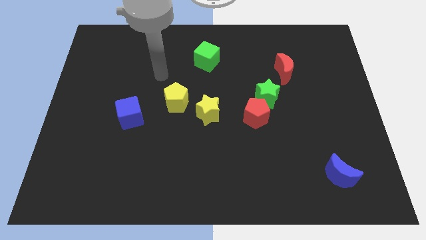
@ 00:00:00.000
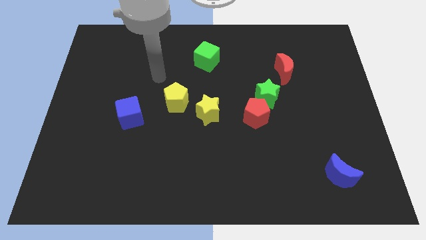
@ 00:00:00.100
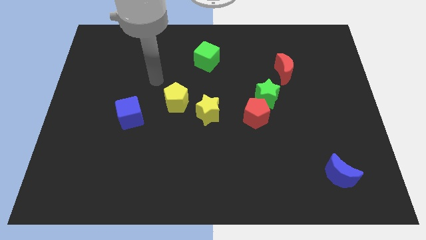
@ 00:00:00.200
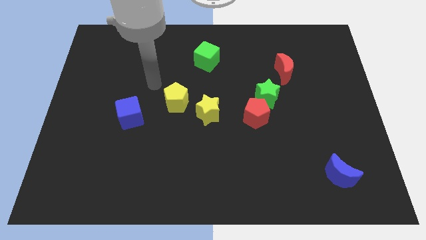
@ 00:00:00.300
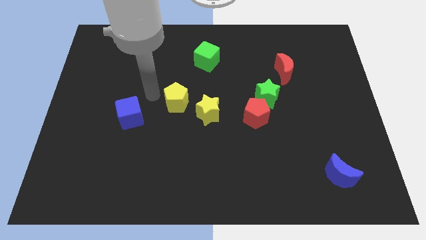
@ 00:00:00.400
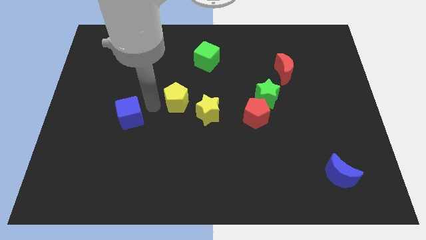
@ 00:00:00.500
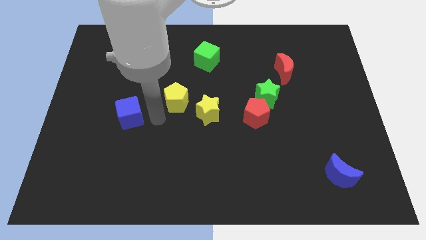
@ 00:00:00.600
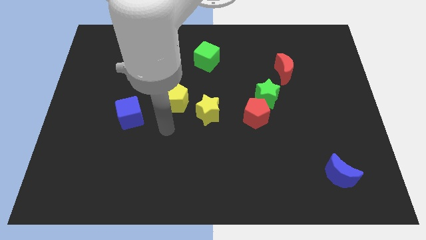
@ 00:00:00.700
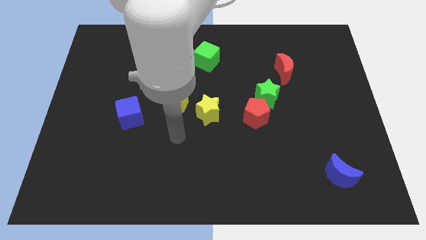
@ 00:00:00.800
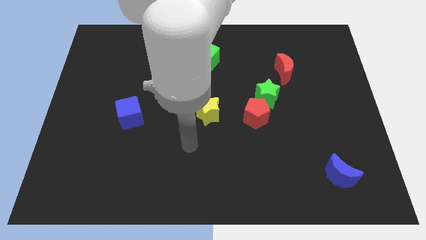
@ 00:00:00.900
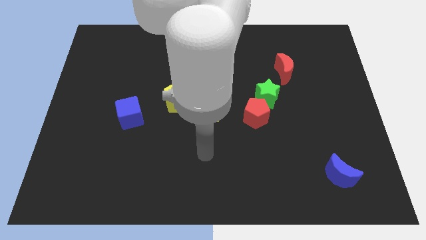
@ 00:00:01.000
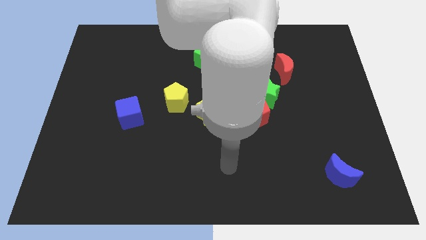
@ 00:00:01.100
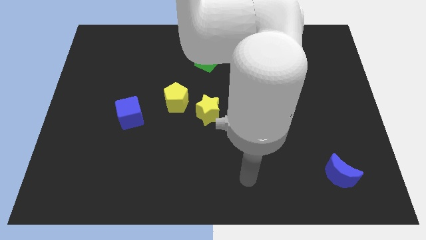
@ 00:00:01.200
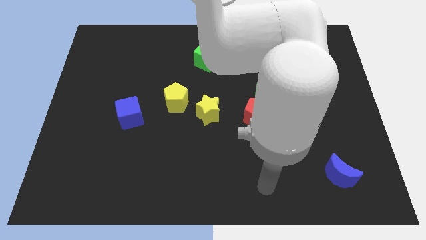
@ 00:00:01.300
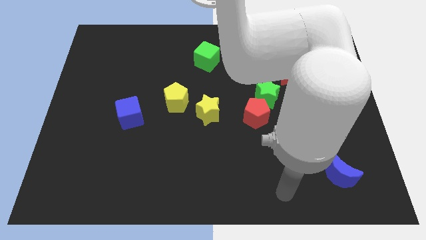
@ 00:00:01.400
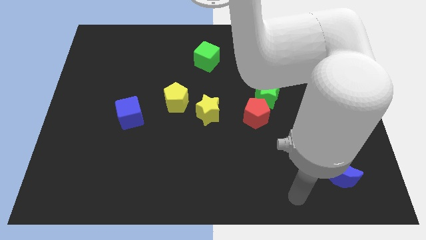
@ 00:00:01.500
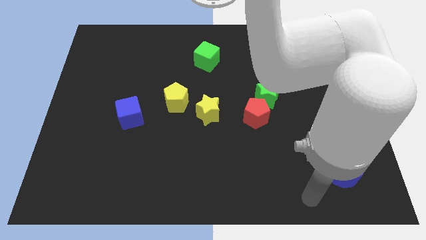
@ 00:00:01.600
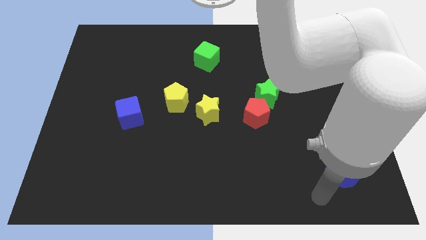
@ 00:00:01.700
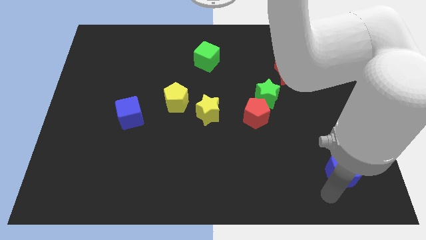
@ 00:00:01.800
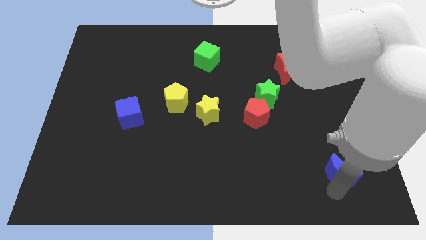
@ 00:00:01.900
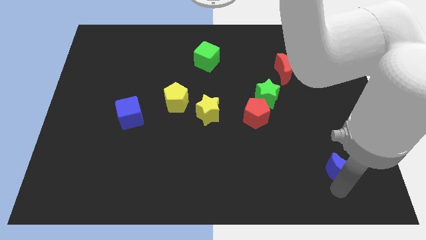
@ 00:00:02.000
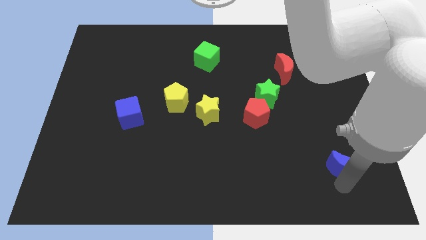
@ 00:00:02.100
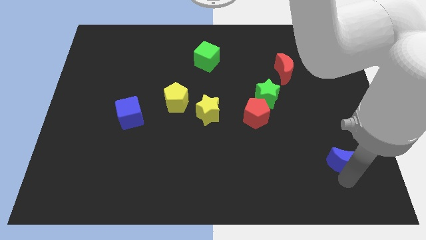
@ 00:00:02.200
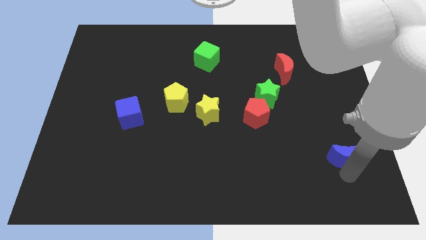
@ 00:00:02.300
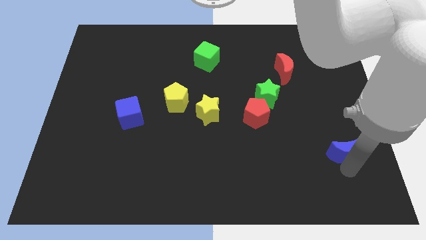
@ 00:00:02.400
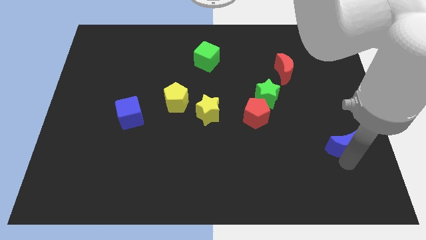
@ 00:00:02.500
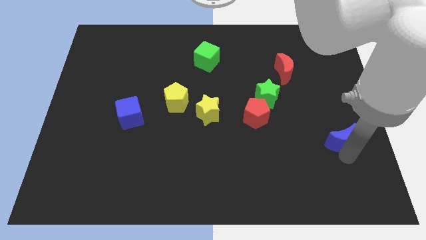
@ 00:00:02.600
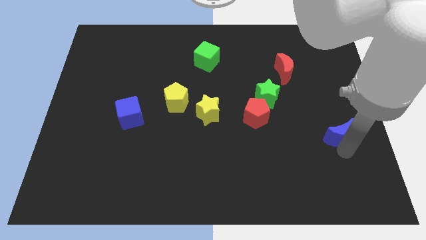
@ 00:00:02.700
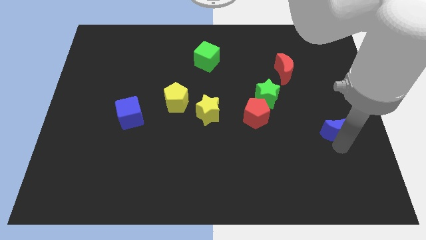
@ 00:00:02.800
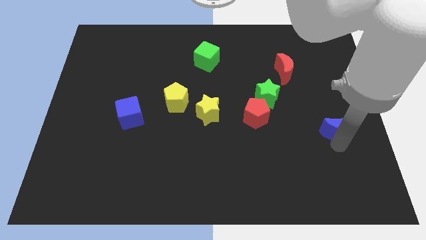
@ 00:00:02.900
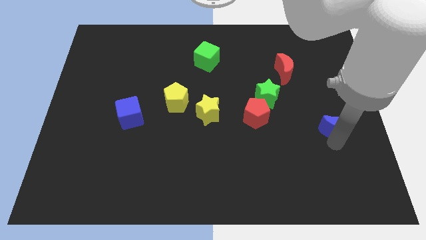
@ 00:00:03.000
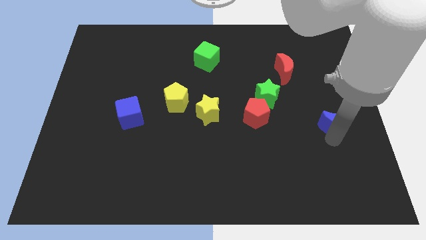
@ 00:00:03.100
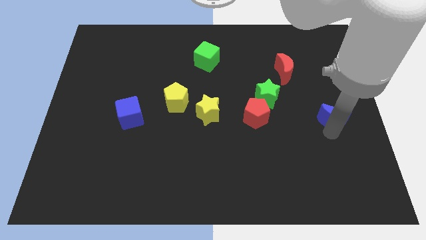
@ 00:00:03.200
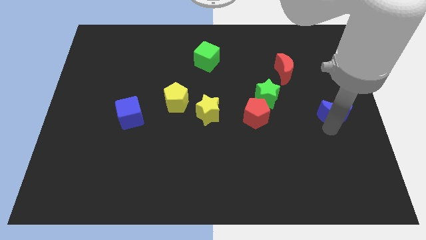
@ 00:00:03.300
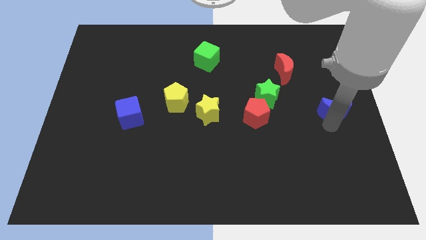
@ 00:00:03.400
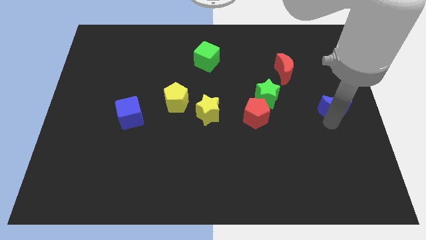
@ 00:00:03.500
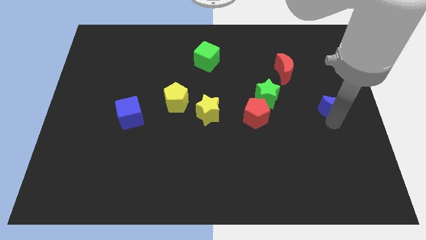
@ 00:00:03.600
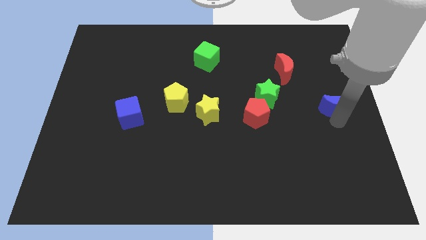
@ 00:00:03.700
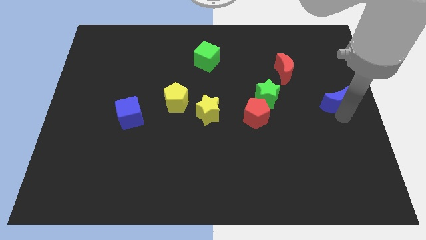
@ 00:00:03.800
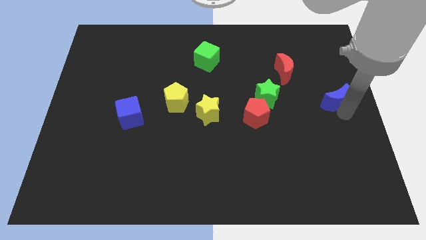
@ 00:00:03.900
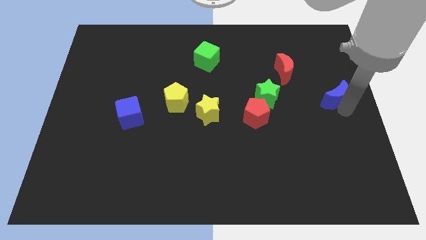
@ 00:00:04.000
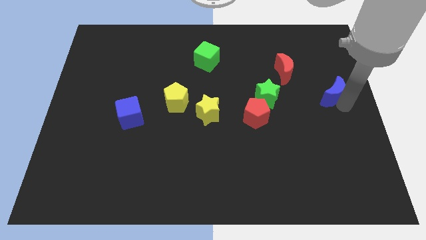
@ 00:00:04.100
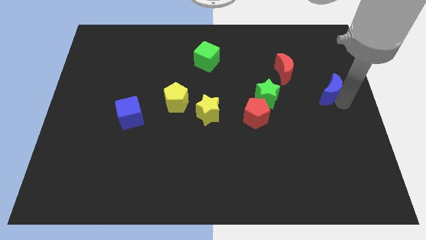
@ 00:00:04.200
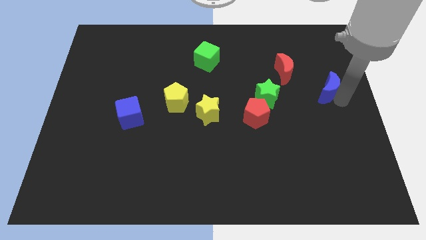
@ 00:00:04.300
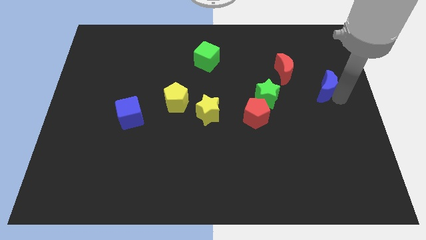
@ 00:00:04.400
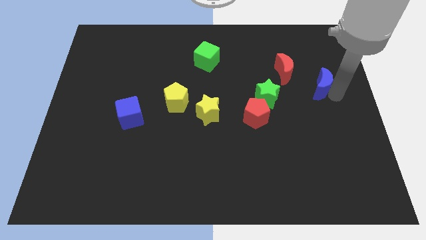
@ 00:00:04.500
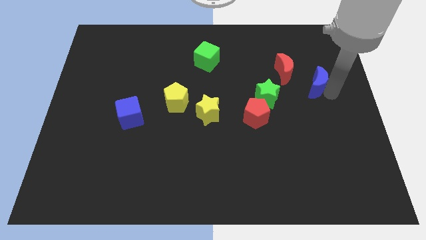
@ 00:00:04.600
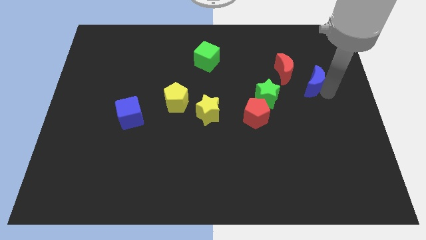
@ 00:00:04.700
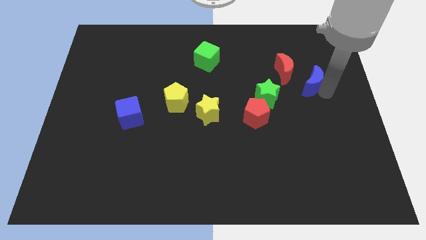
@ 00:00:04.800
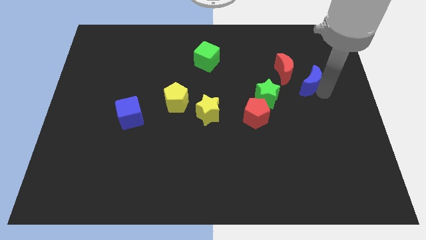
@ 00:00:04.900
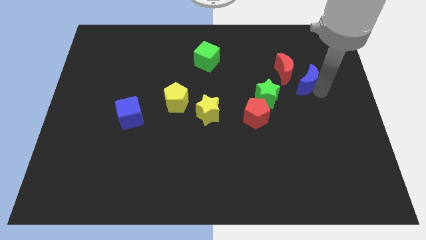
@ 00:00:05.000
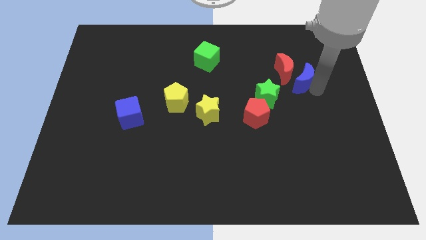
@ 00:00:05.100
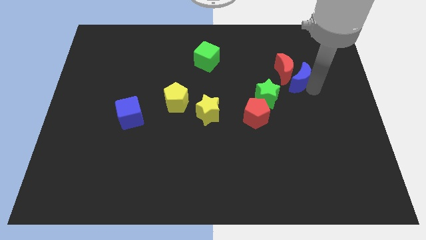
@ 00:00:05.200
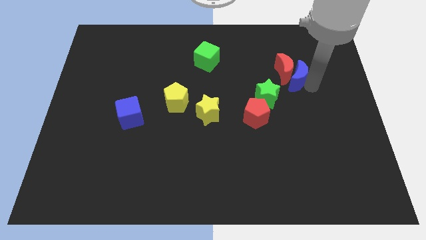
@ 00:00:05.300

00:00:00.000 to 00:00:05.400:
move the blue moon towards the red moon

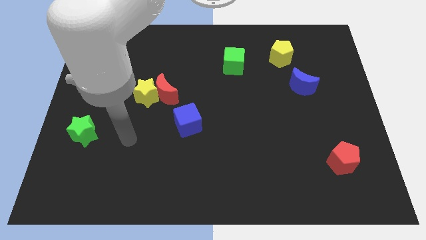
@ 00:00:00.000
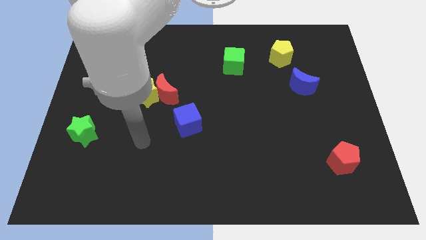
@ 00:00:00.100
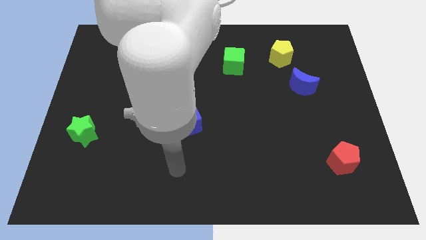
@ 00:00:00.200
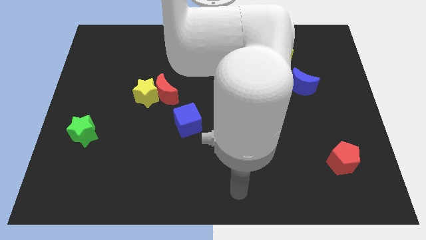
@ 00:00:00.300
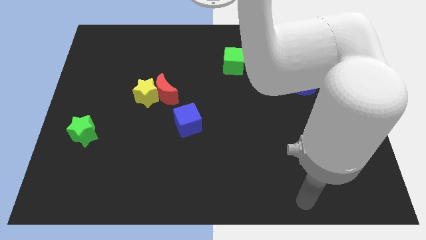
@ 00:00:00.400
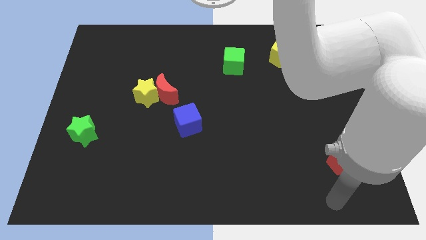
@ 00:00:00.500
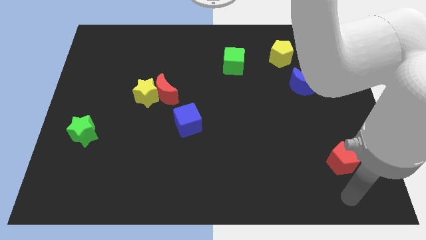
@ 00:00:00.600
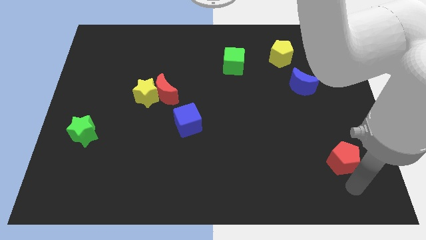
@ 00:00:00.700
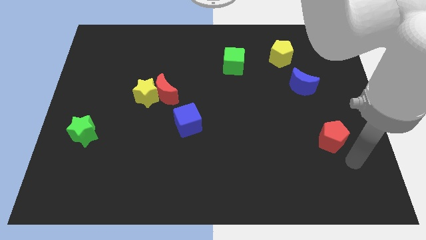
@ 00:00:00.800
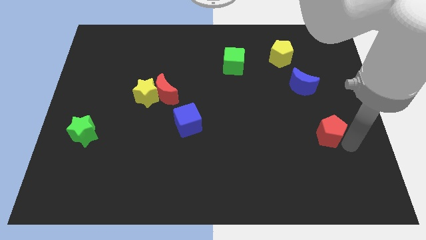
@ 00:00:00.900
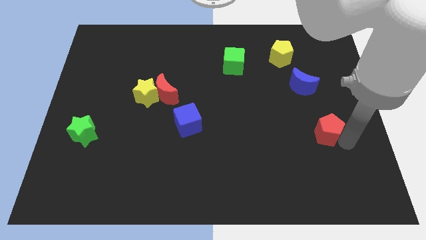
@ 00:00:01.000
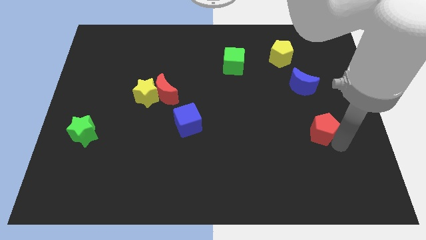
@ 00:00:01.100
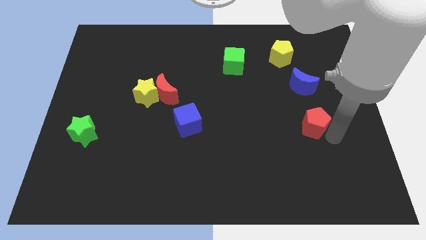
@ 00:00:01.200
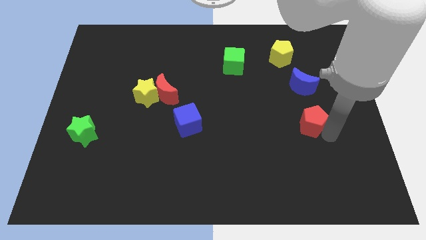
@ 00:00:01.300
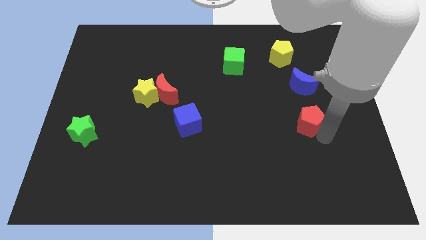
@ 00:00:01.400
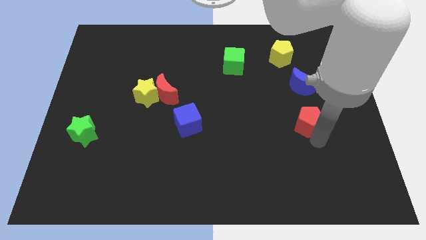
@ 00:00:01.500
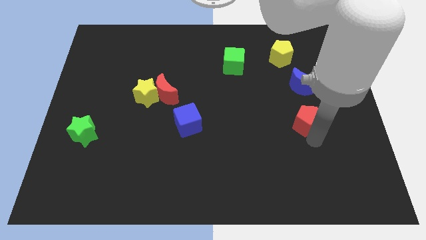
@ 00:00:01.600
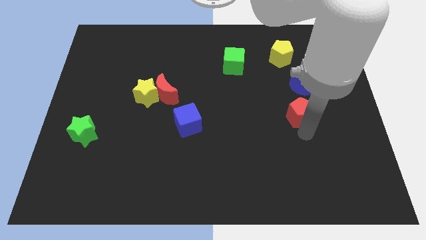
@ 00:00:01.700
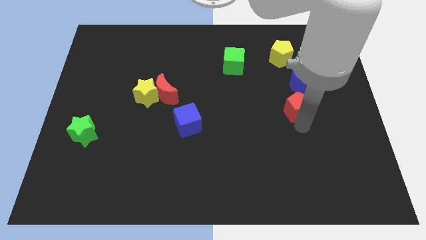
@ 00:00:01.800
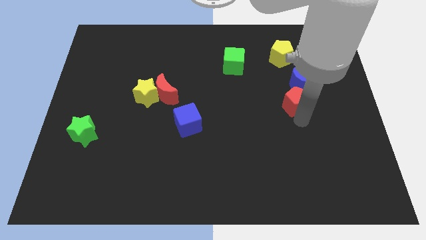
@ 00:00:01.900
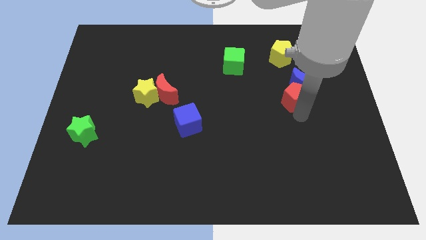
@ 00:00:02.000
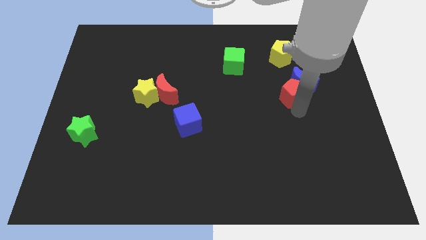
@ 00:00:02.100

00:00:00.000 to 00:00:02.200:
put the red pentagon close to the blue moon

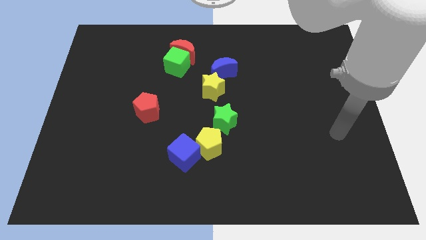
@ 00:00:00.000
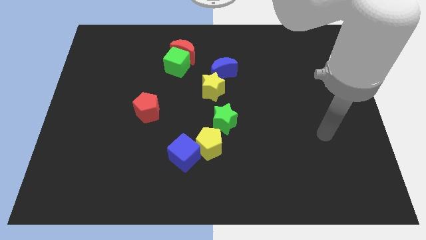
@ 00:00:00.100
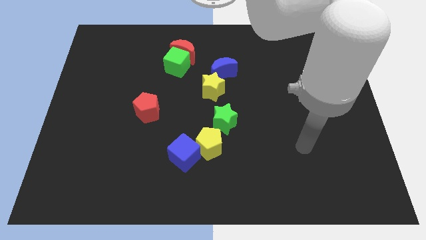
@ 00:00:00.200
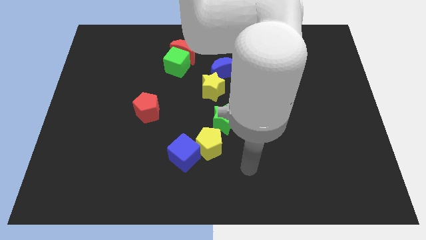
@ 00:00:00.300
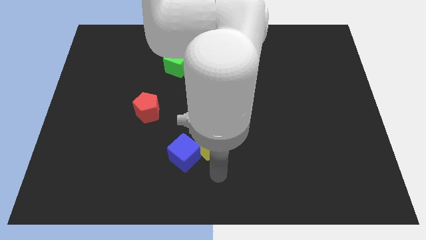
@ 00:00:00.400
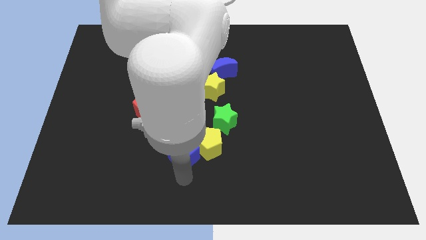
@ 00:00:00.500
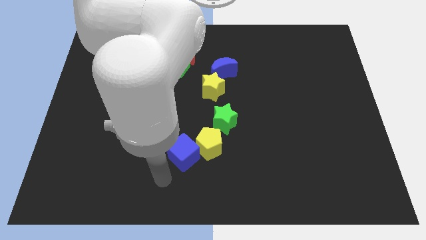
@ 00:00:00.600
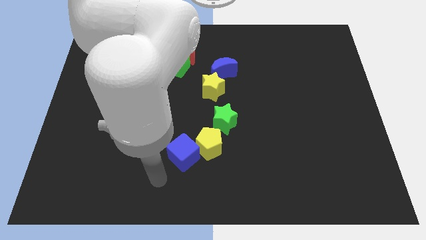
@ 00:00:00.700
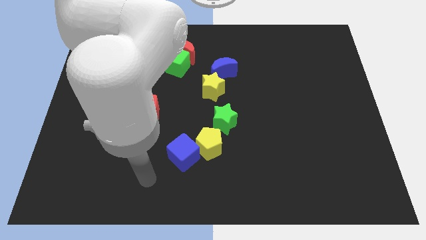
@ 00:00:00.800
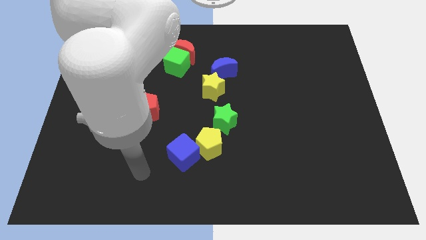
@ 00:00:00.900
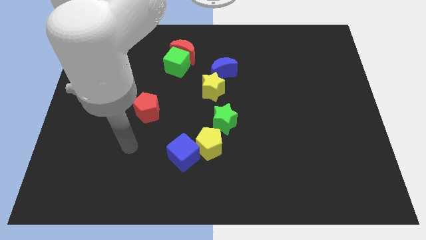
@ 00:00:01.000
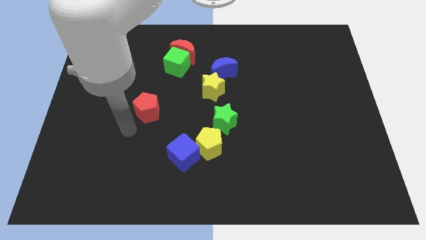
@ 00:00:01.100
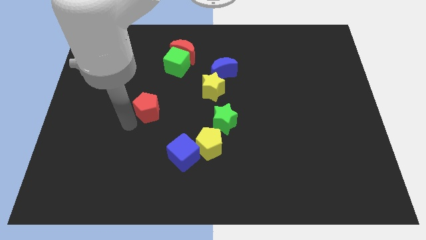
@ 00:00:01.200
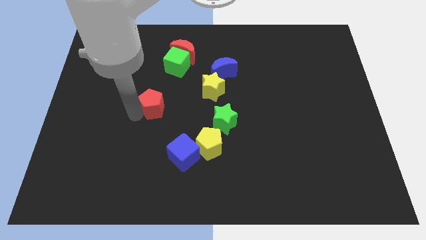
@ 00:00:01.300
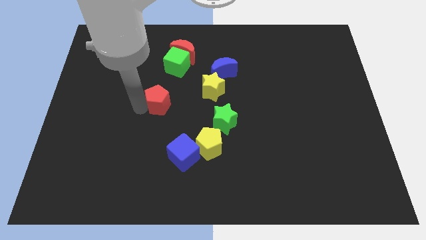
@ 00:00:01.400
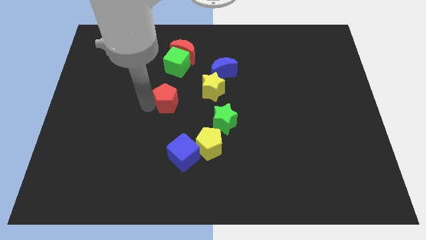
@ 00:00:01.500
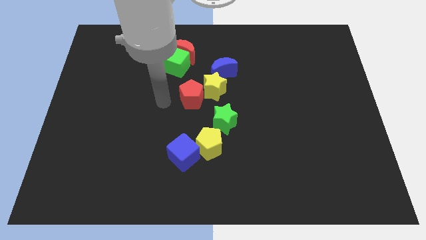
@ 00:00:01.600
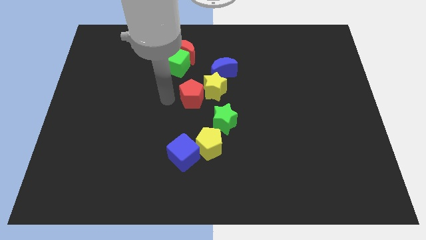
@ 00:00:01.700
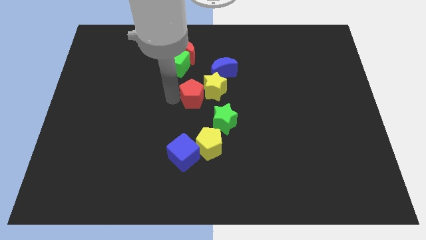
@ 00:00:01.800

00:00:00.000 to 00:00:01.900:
move the red pentagon close to the yellow star
